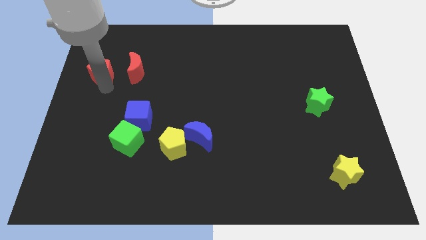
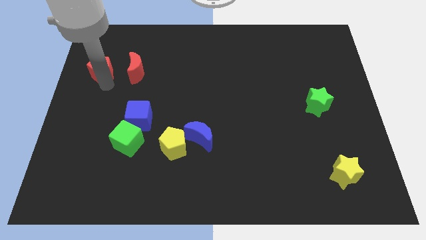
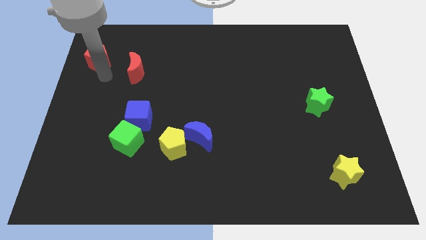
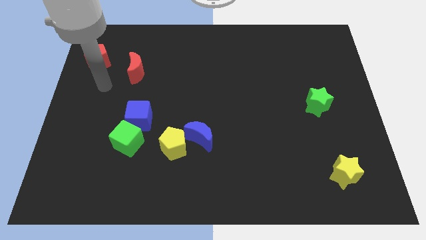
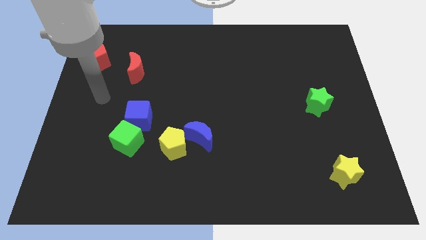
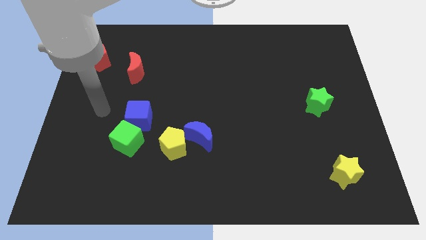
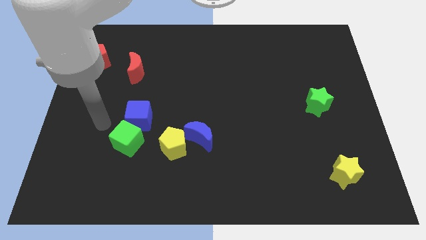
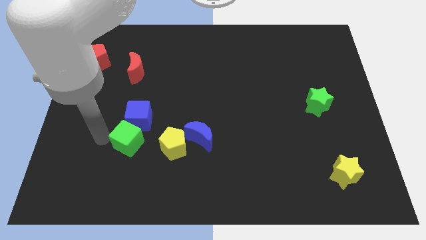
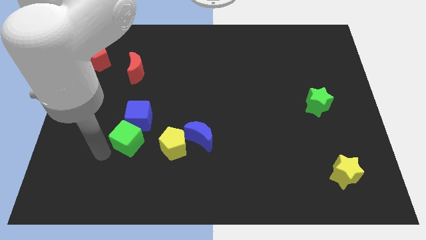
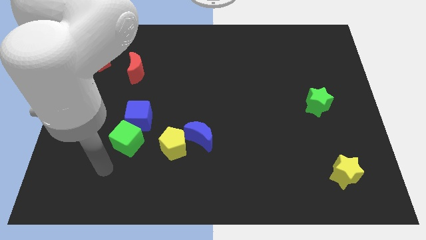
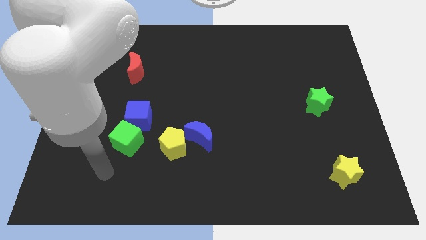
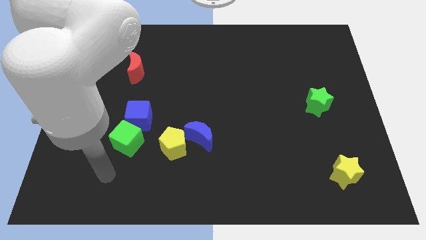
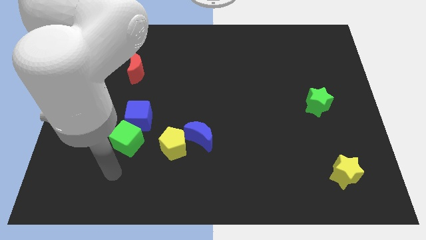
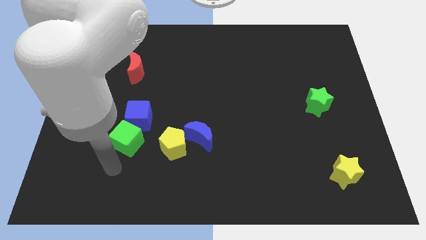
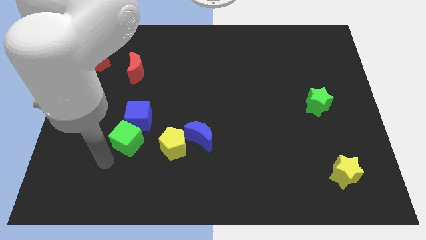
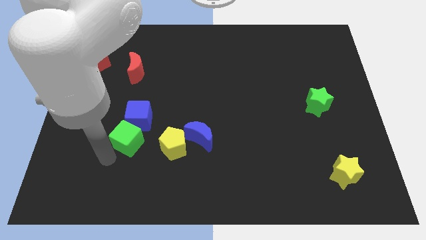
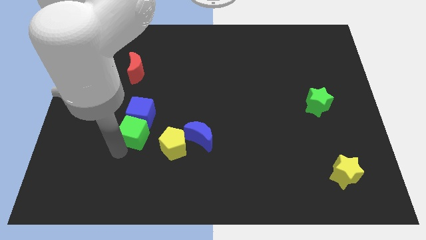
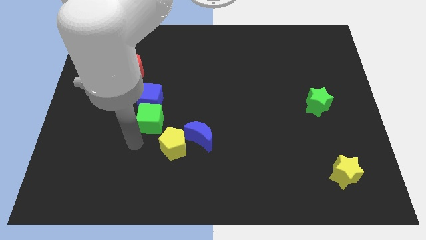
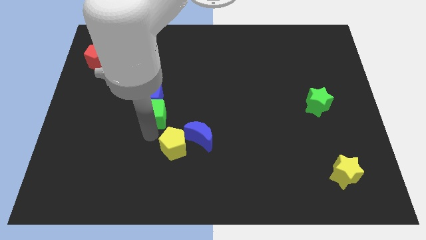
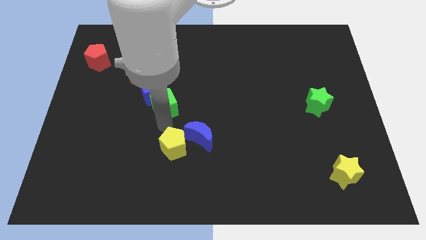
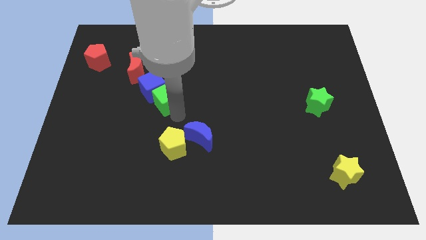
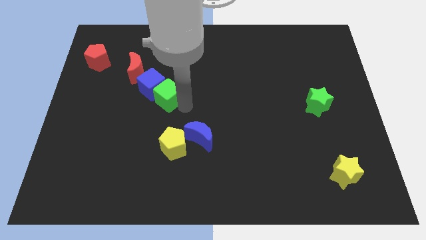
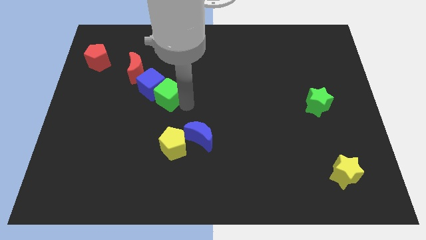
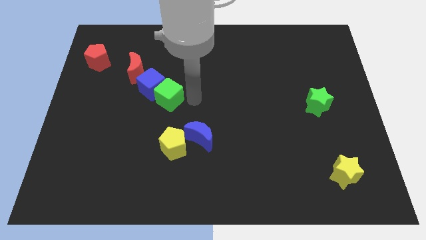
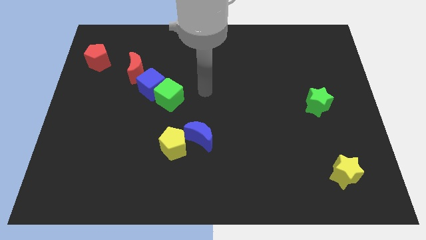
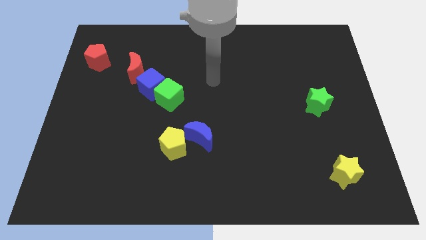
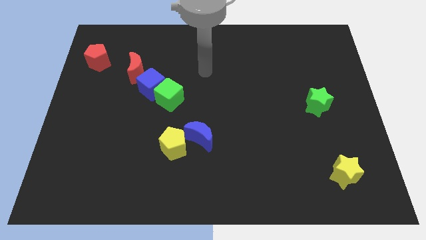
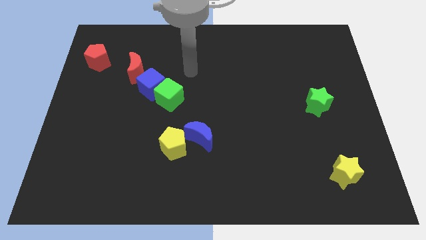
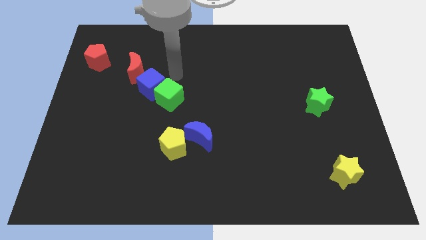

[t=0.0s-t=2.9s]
move green cube beside blue cube

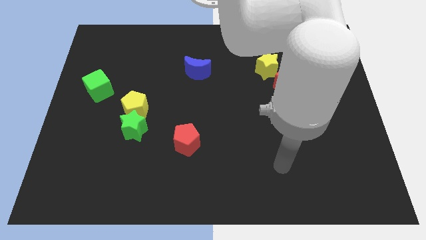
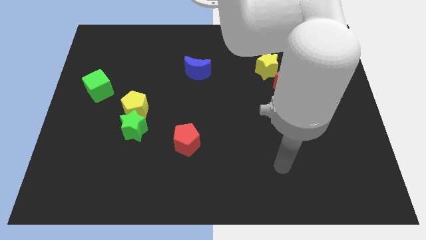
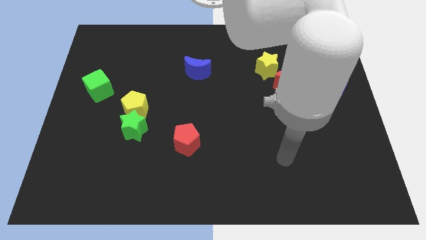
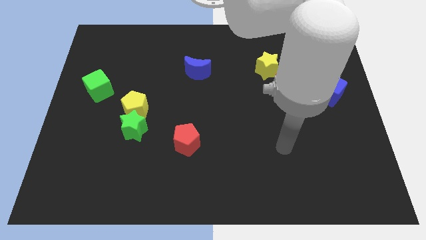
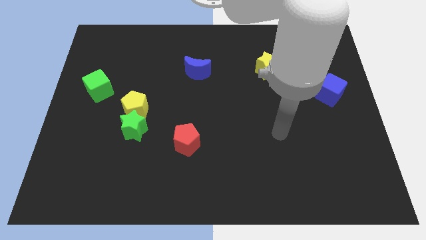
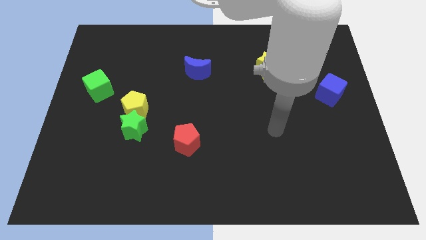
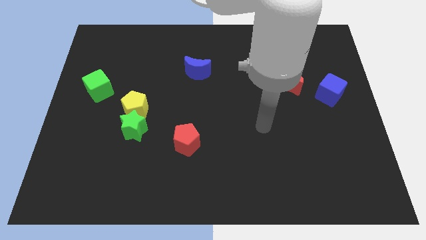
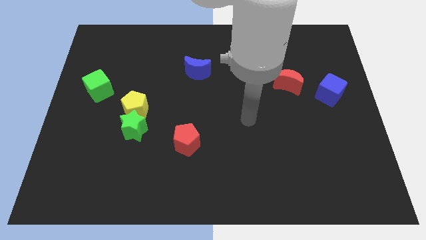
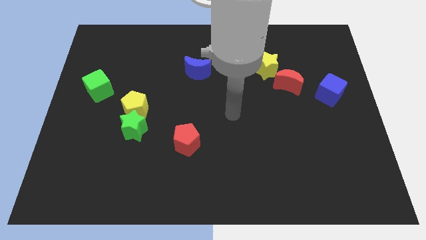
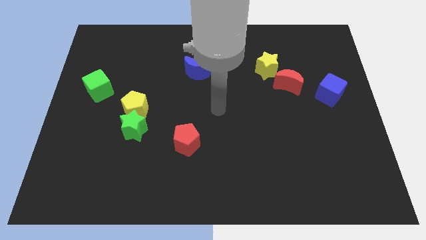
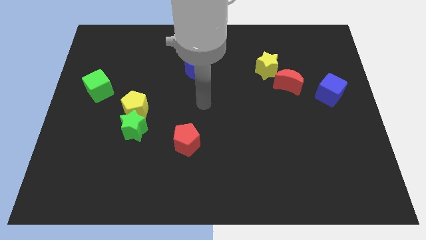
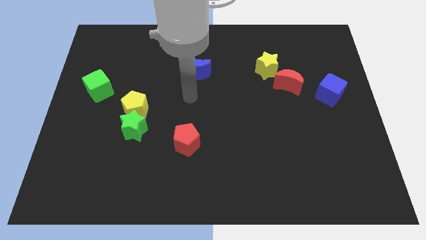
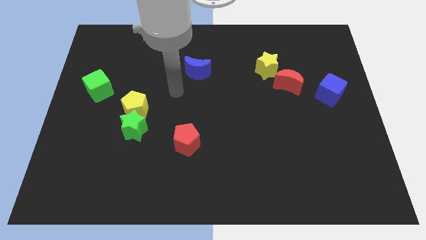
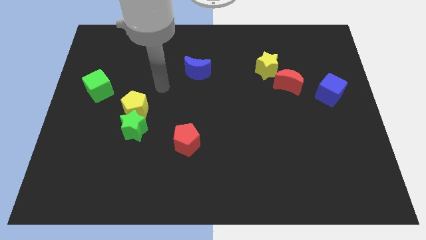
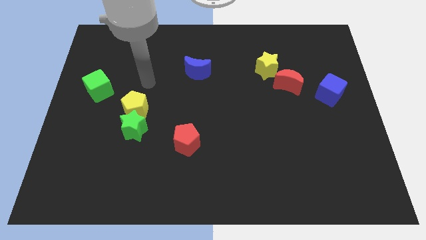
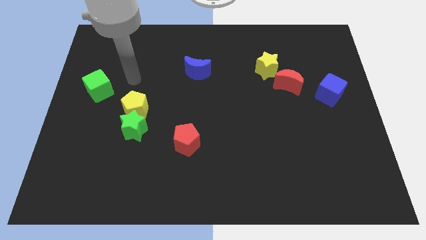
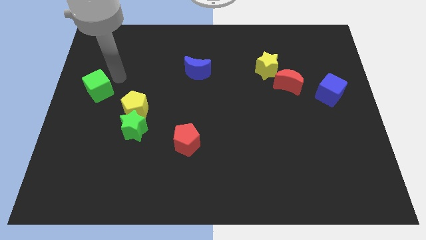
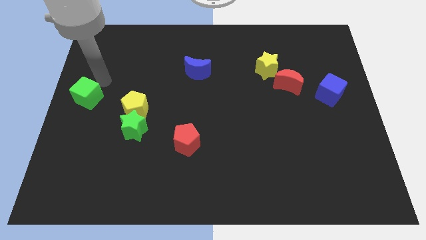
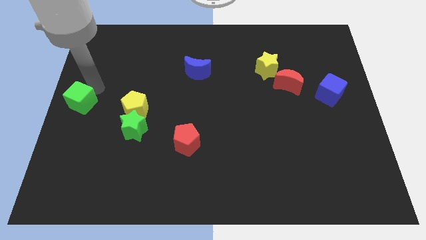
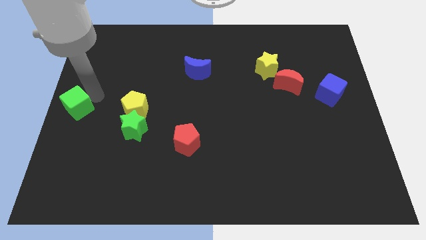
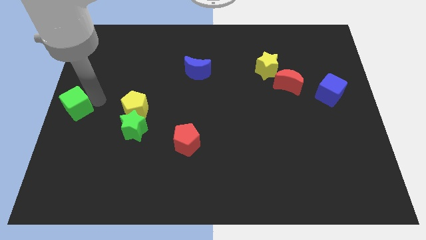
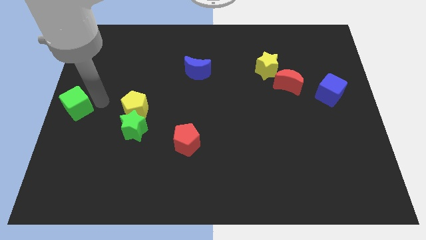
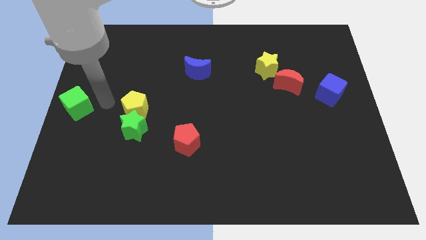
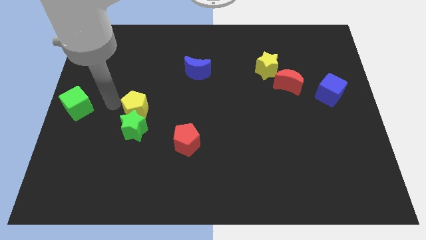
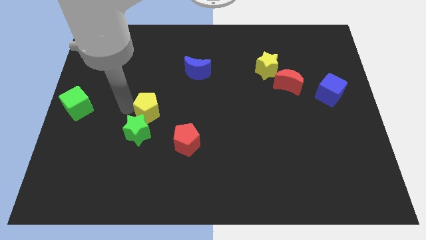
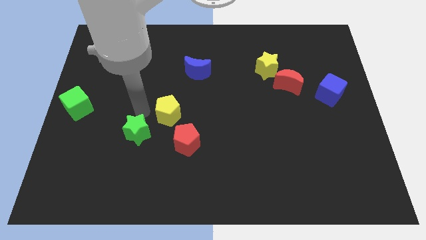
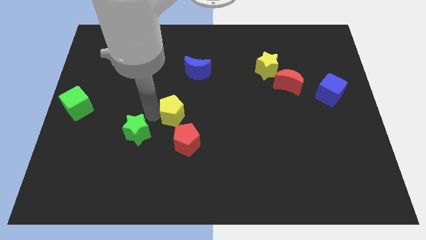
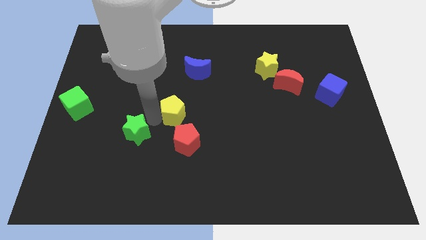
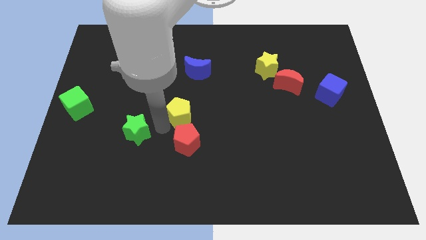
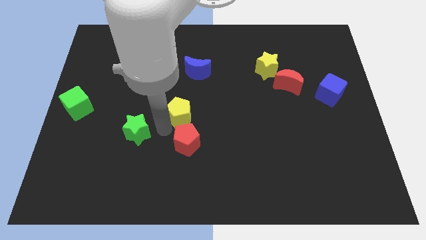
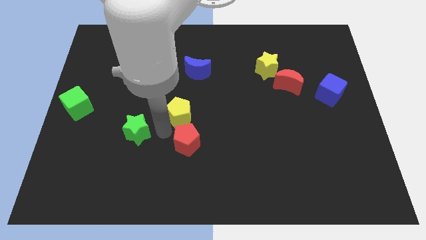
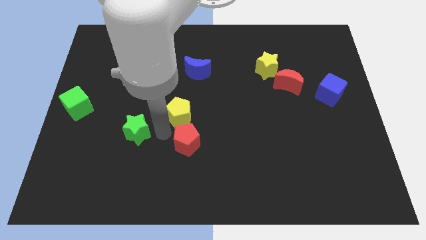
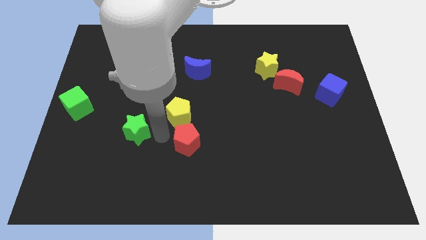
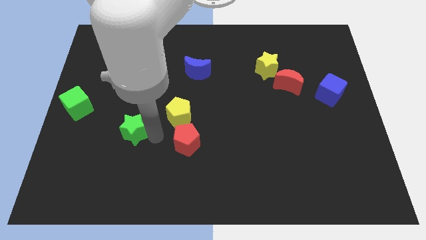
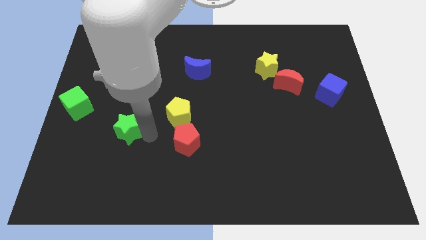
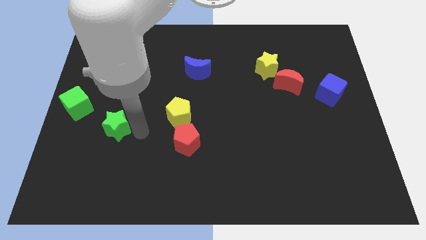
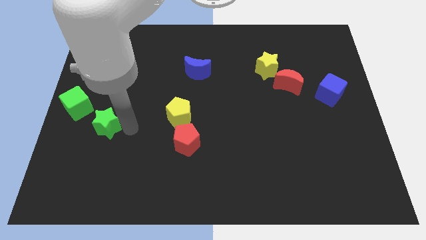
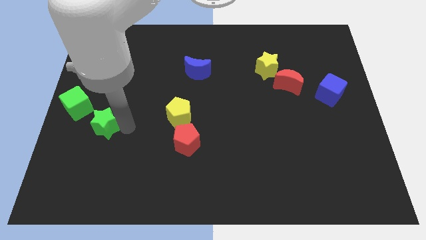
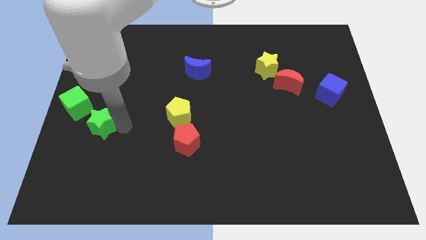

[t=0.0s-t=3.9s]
slightly move the green cube to the left of the board

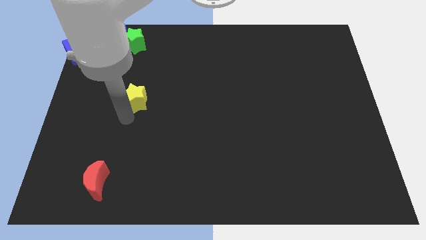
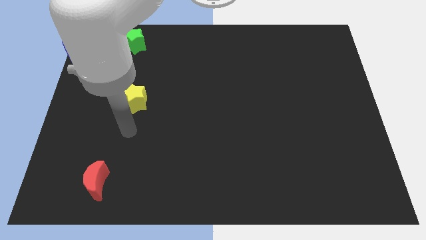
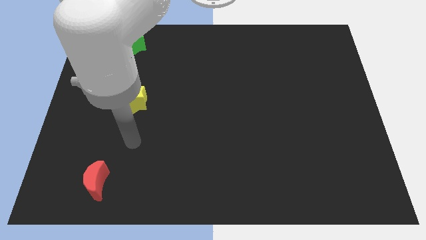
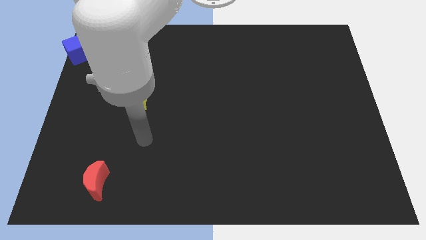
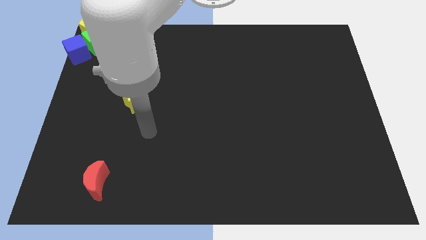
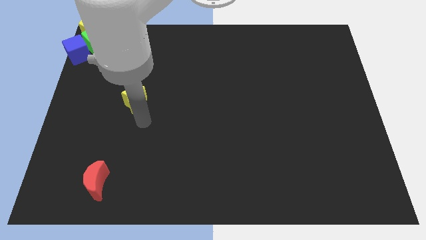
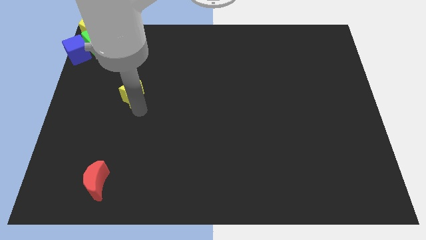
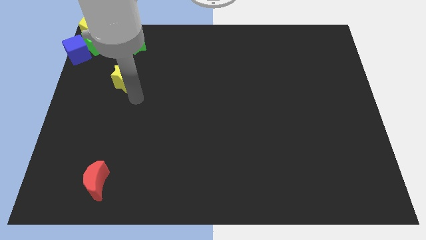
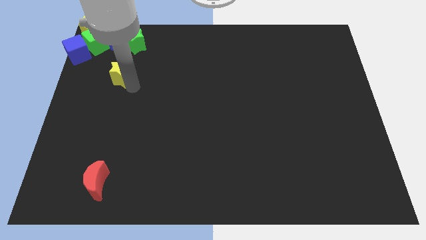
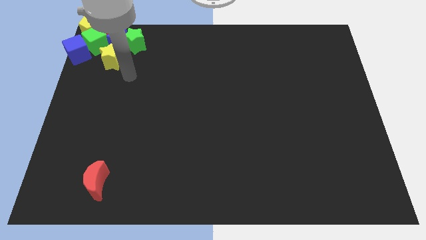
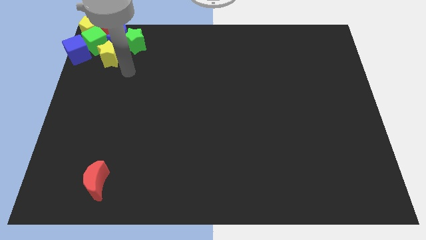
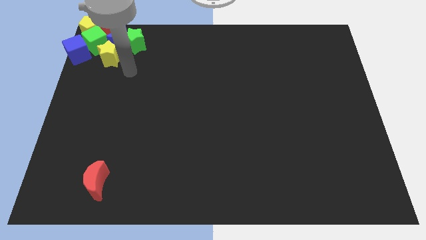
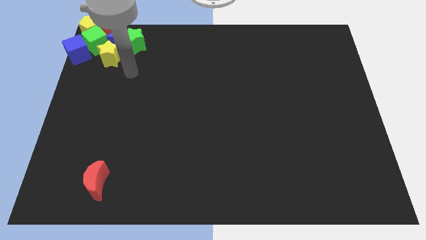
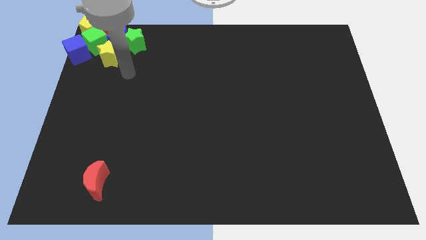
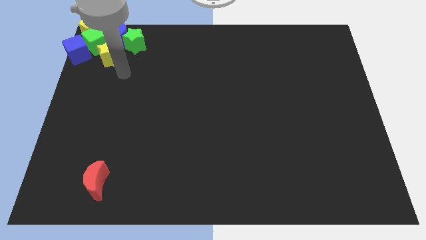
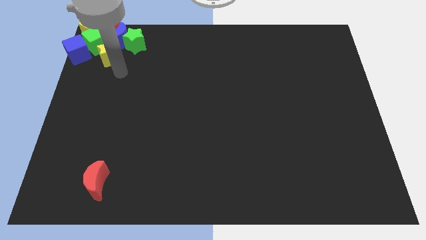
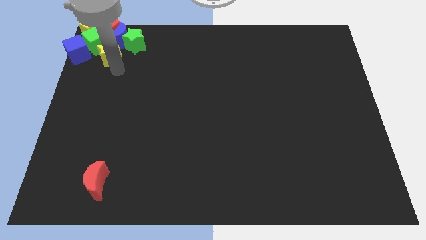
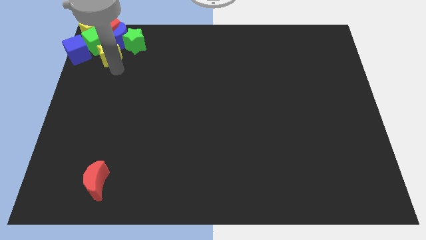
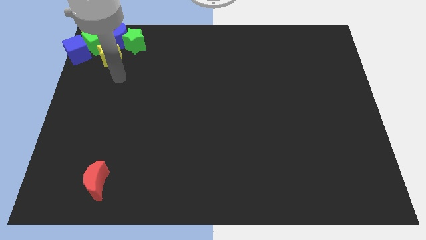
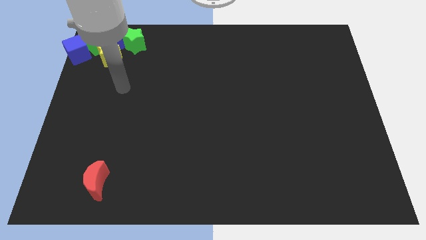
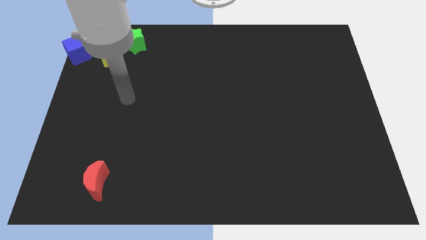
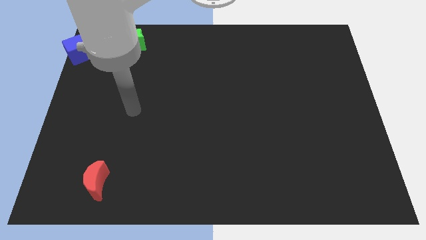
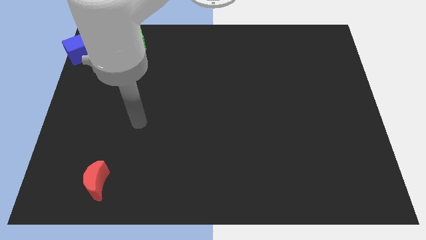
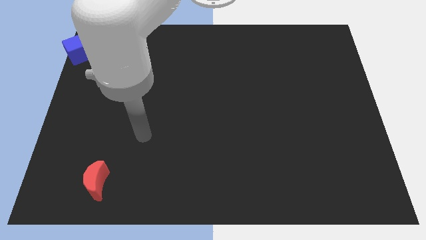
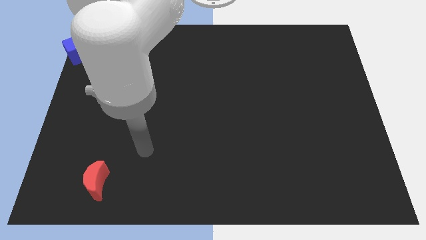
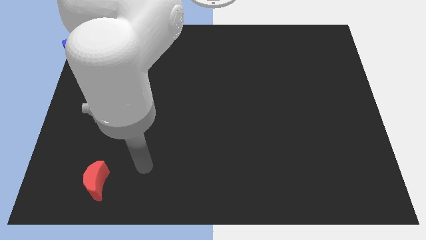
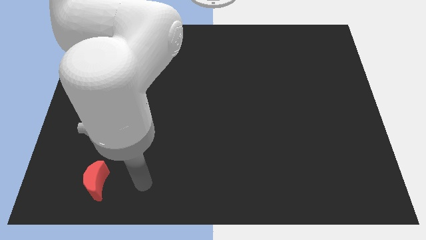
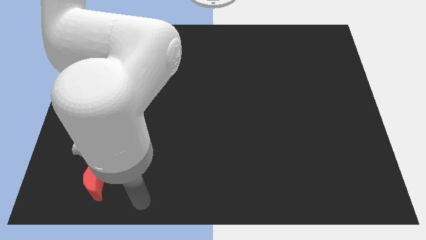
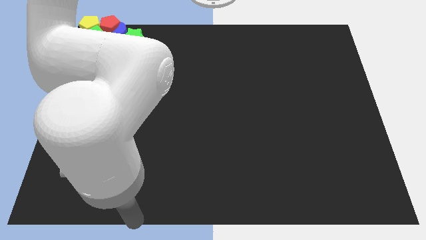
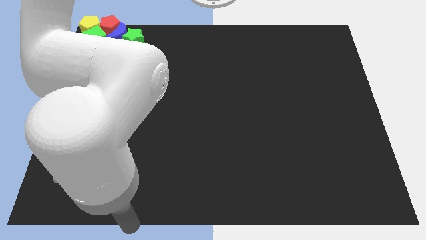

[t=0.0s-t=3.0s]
push yellow star into group of blocks
